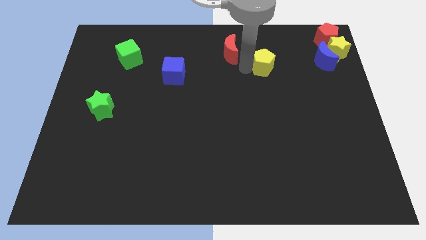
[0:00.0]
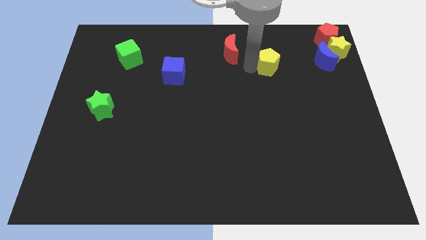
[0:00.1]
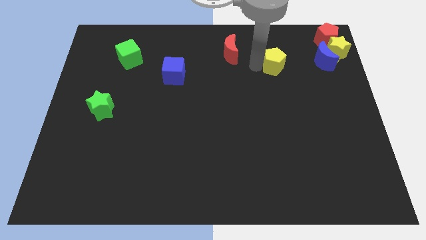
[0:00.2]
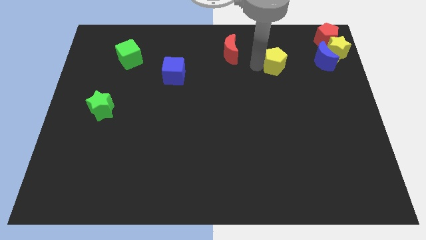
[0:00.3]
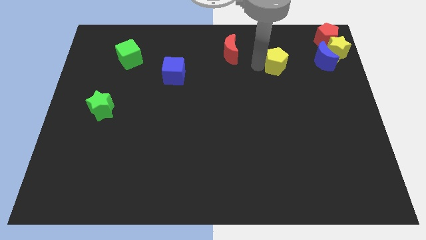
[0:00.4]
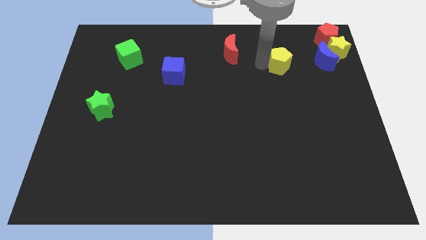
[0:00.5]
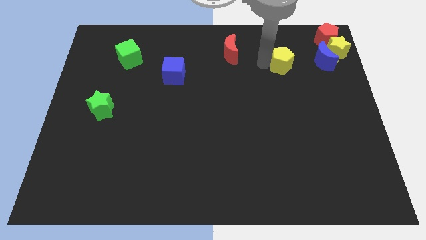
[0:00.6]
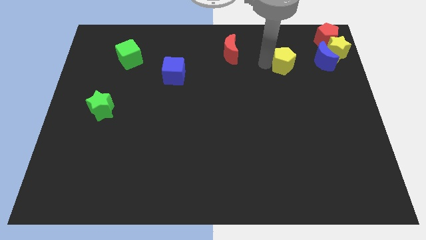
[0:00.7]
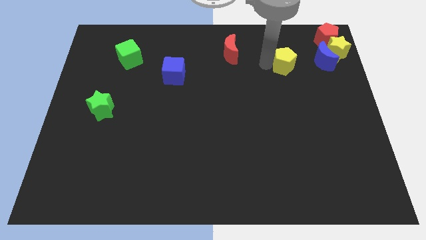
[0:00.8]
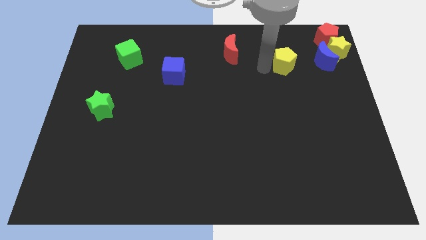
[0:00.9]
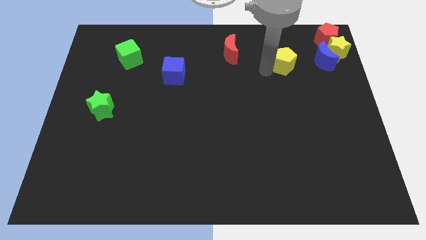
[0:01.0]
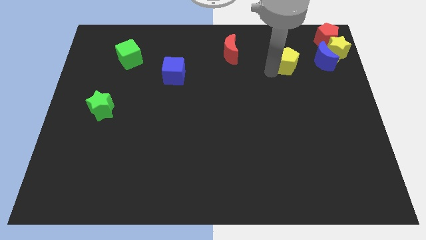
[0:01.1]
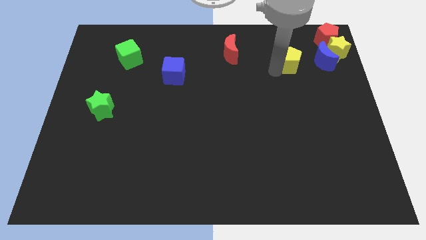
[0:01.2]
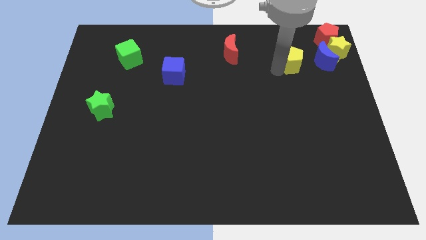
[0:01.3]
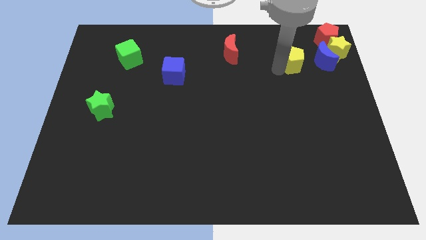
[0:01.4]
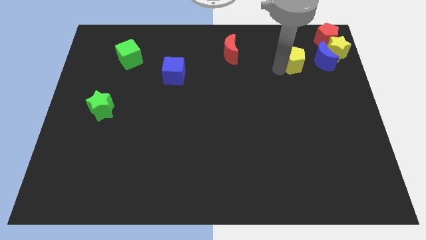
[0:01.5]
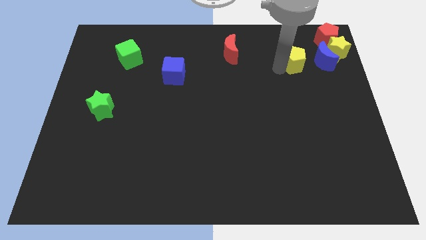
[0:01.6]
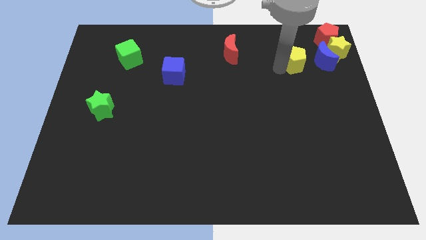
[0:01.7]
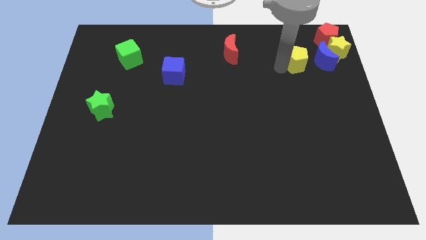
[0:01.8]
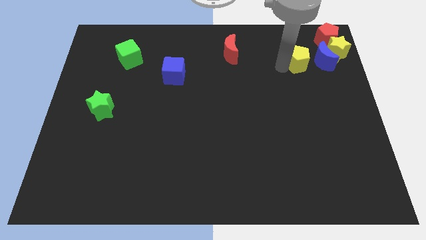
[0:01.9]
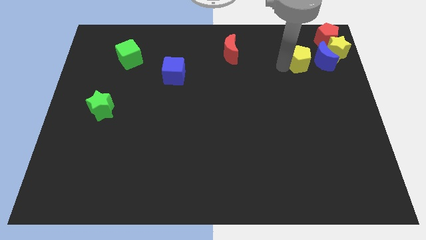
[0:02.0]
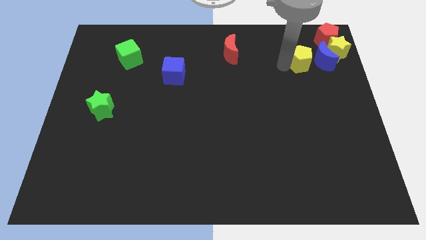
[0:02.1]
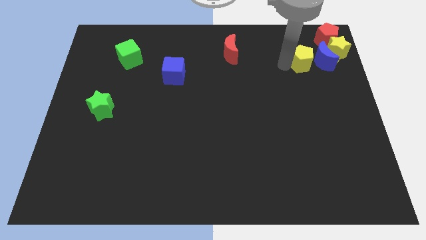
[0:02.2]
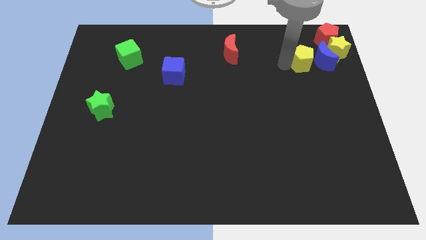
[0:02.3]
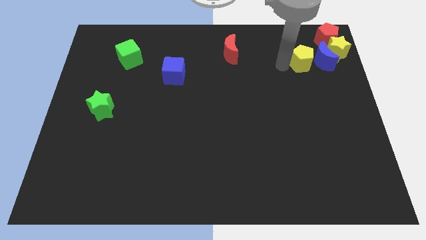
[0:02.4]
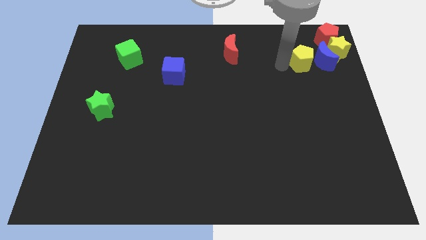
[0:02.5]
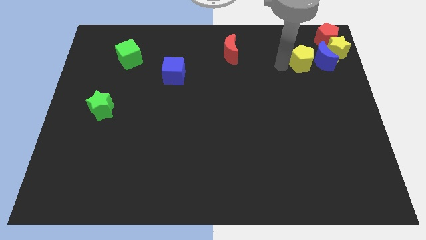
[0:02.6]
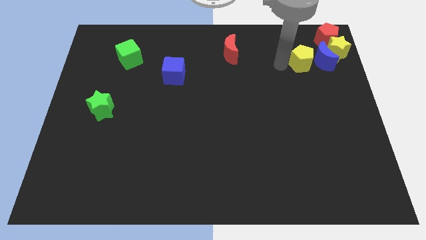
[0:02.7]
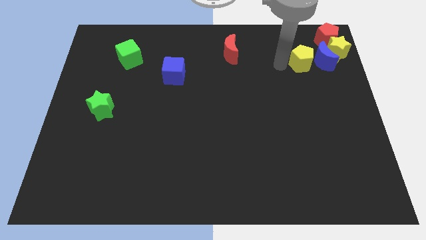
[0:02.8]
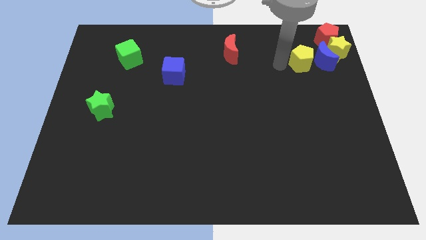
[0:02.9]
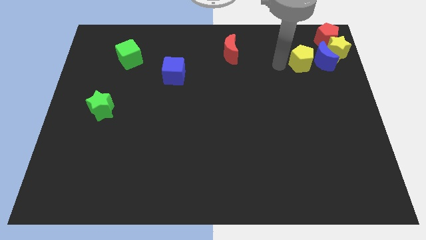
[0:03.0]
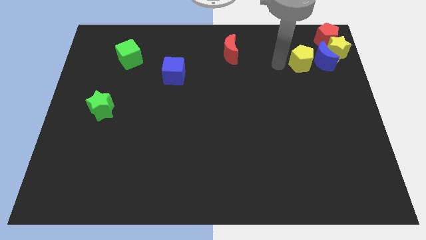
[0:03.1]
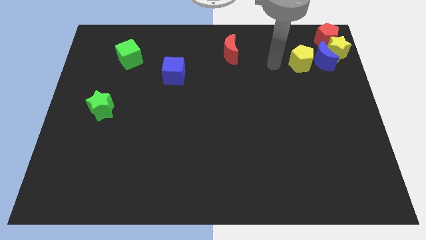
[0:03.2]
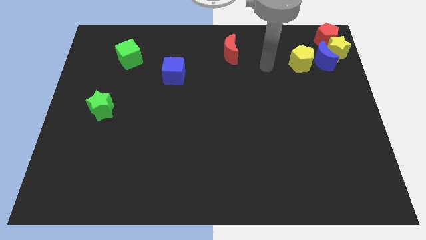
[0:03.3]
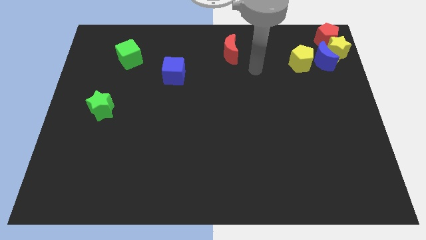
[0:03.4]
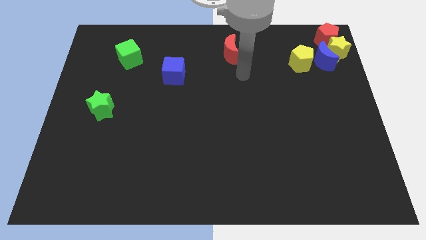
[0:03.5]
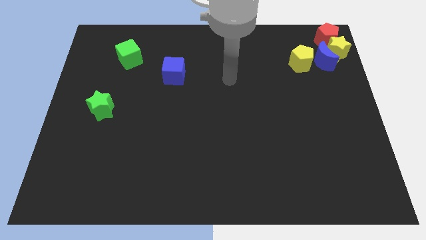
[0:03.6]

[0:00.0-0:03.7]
place the yellow pentagon left to the blue crescent

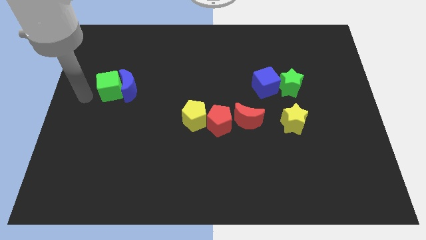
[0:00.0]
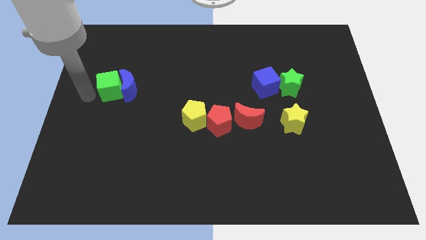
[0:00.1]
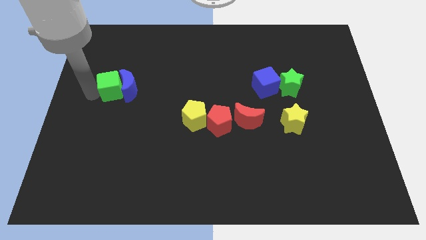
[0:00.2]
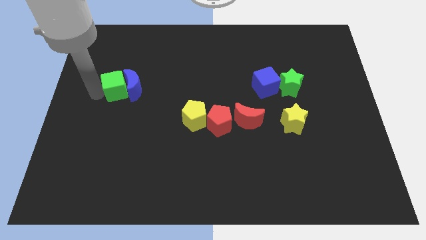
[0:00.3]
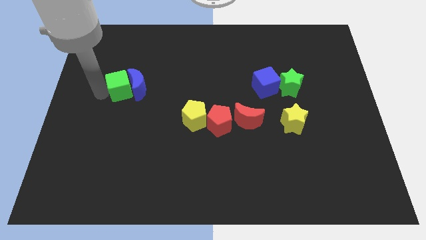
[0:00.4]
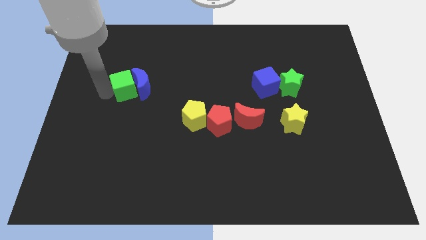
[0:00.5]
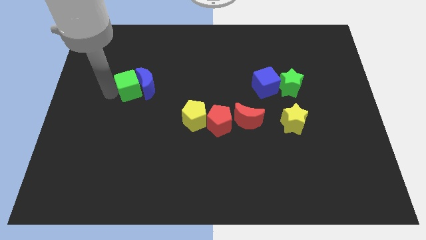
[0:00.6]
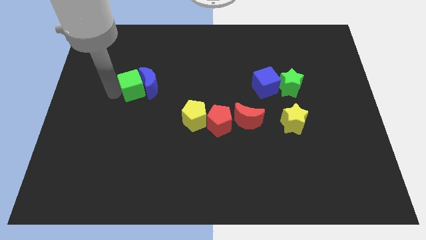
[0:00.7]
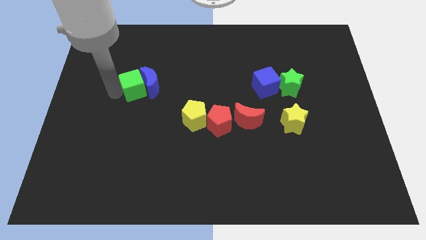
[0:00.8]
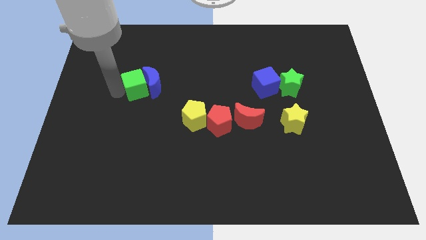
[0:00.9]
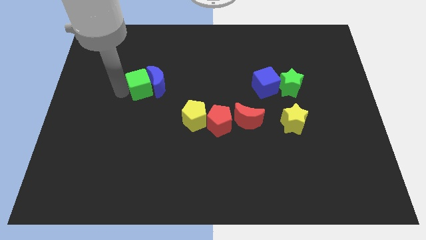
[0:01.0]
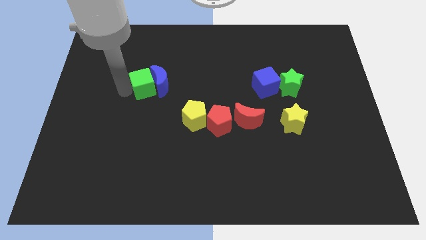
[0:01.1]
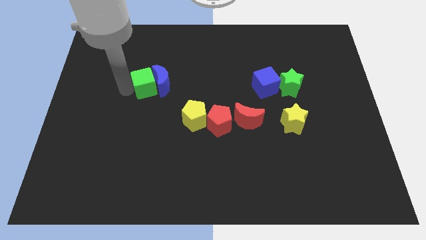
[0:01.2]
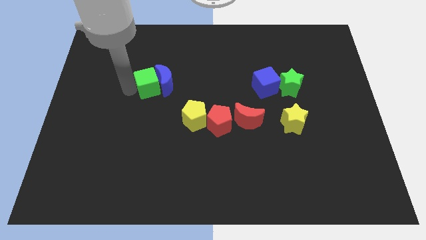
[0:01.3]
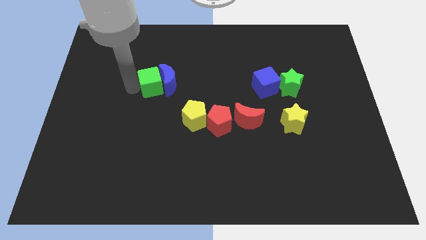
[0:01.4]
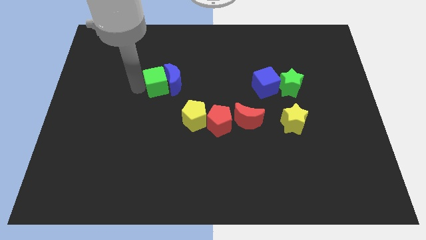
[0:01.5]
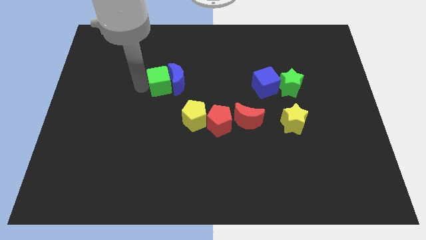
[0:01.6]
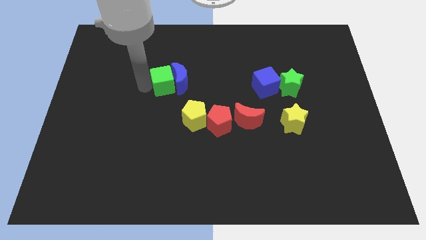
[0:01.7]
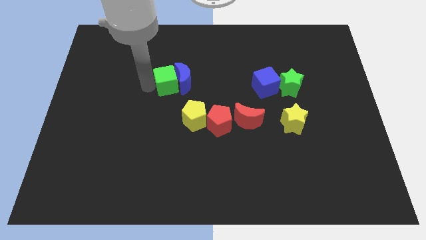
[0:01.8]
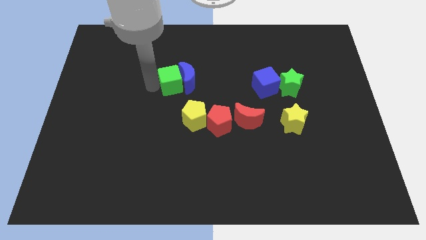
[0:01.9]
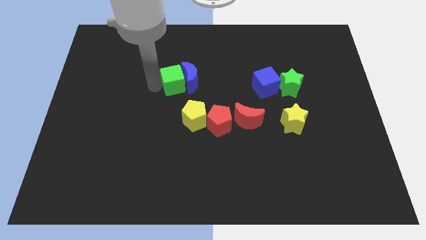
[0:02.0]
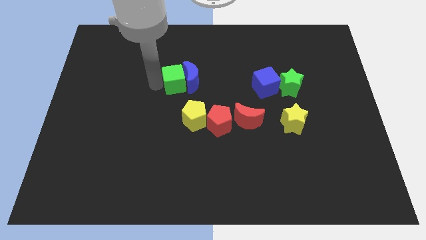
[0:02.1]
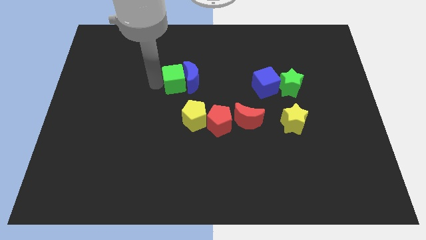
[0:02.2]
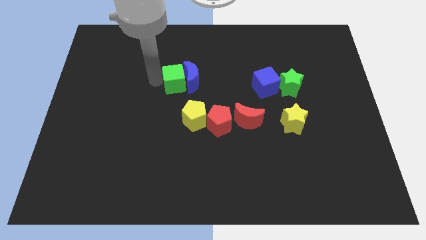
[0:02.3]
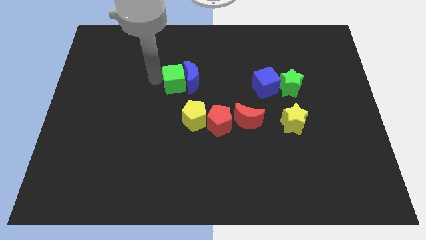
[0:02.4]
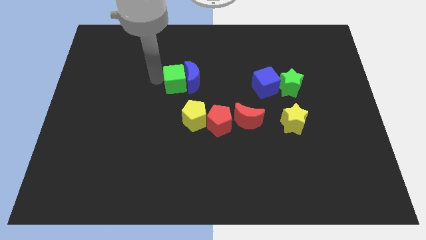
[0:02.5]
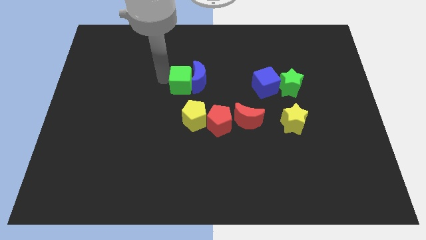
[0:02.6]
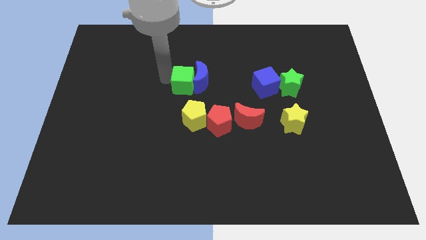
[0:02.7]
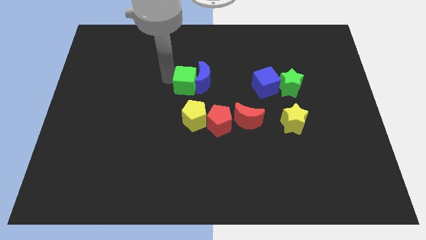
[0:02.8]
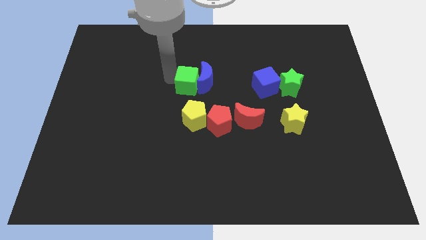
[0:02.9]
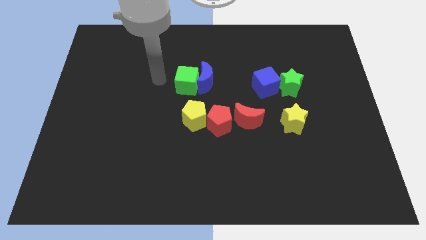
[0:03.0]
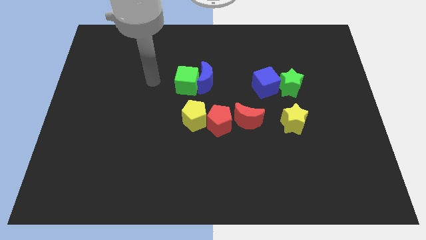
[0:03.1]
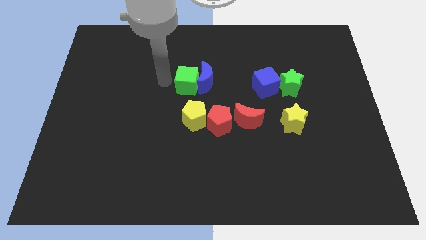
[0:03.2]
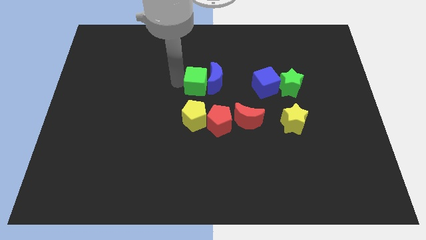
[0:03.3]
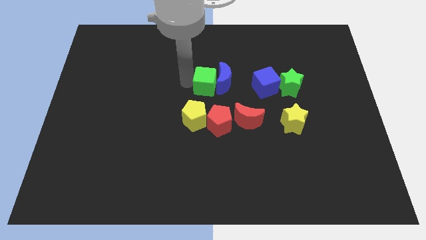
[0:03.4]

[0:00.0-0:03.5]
slide the green cube and blue crescent towards the left side of the blue cube

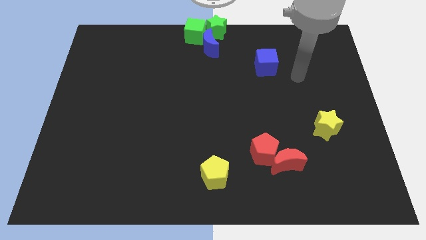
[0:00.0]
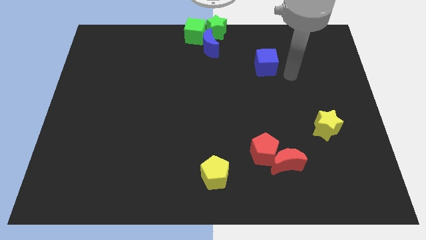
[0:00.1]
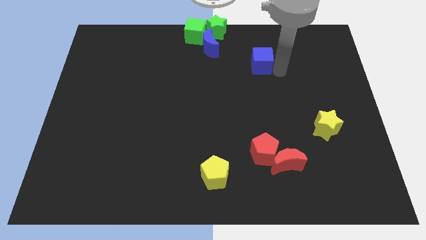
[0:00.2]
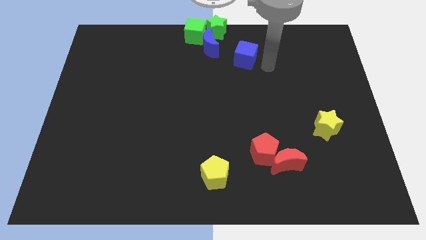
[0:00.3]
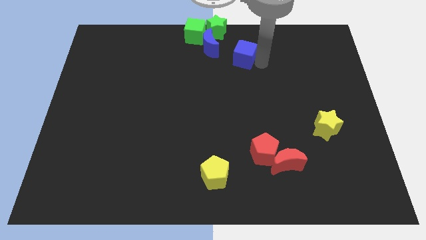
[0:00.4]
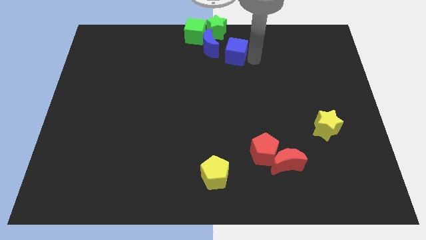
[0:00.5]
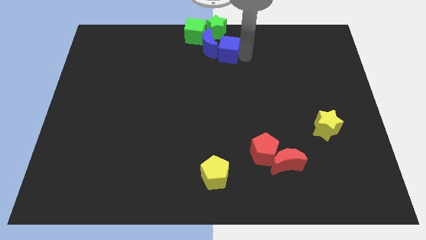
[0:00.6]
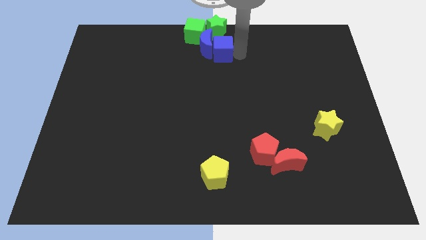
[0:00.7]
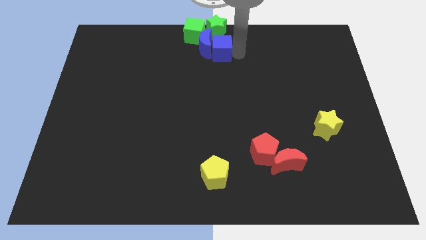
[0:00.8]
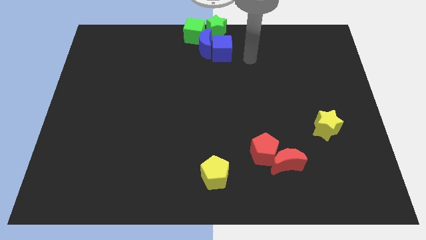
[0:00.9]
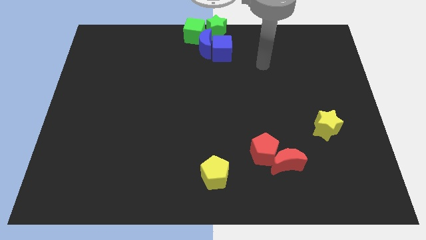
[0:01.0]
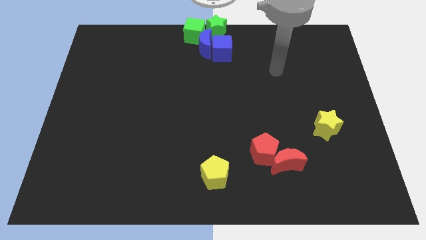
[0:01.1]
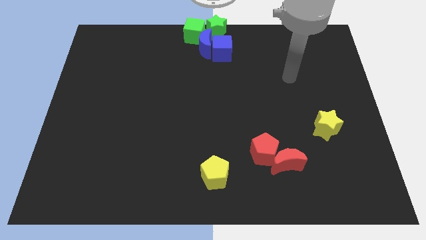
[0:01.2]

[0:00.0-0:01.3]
move the blue cube into the group of blocks

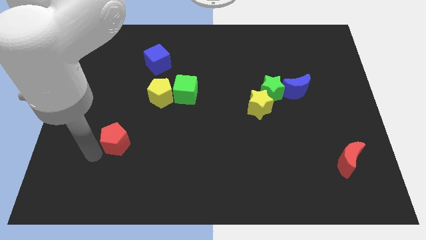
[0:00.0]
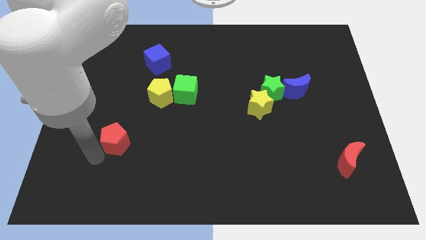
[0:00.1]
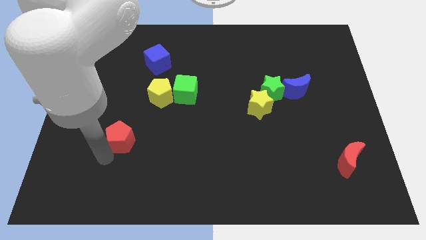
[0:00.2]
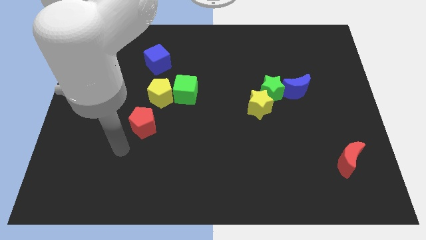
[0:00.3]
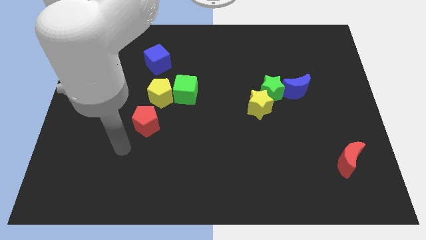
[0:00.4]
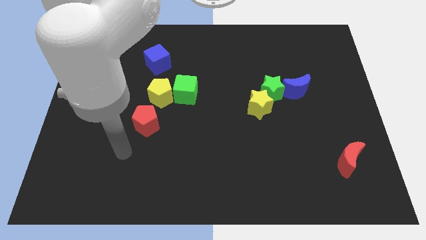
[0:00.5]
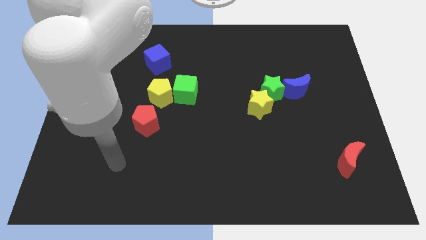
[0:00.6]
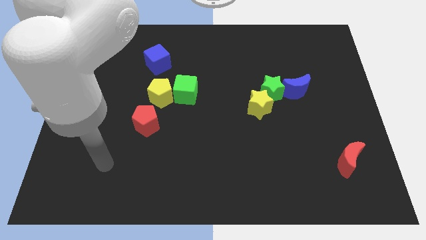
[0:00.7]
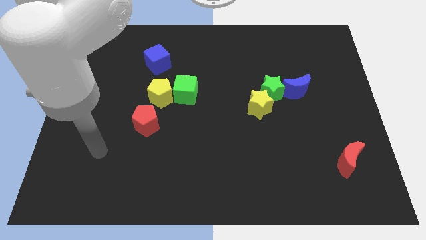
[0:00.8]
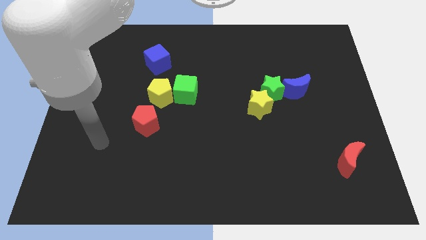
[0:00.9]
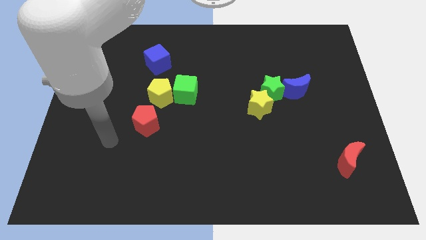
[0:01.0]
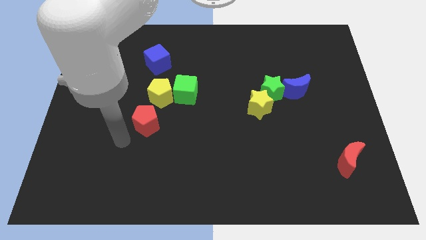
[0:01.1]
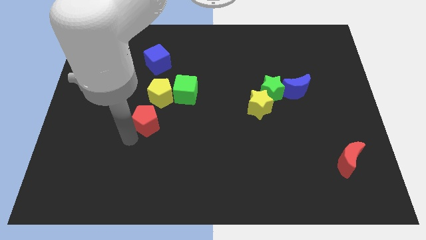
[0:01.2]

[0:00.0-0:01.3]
place the red pentagon below the yellow pentagon
